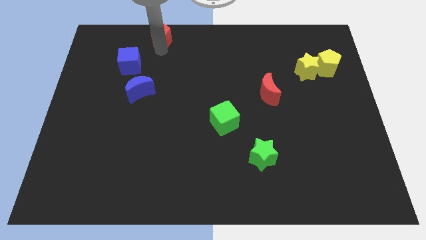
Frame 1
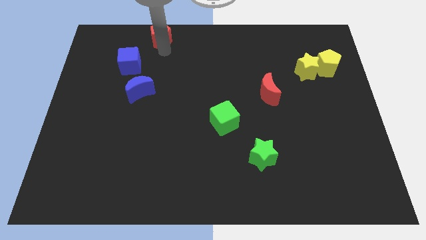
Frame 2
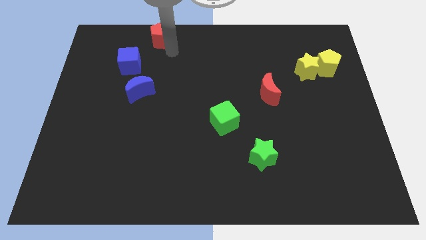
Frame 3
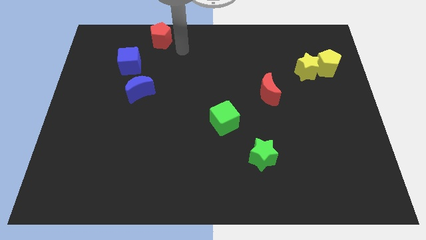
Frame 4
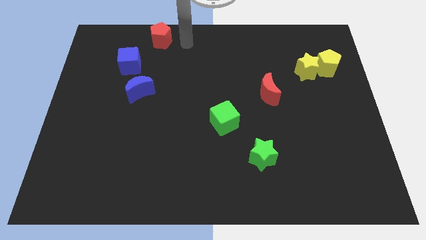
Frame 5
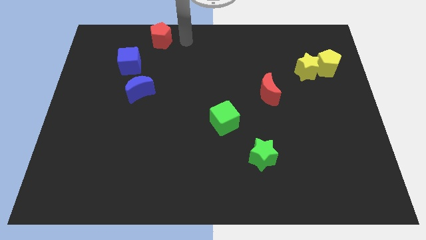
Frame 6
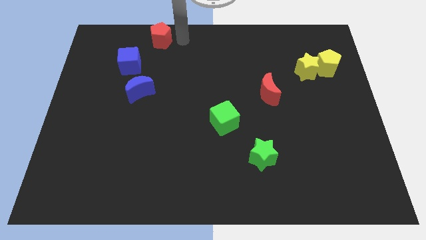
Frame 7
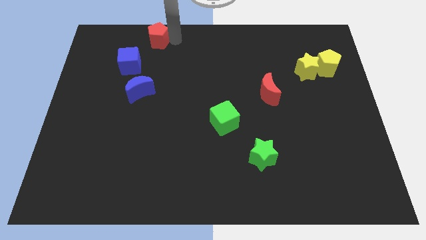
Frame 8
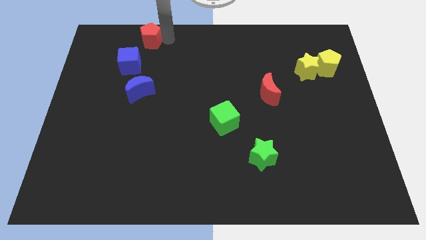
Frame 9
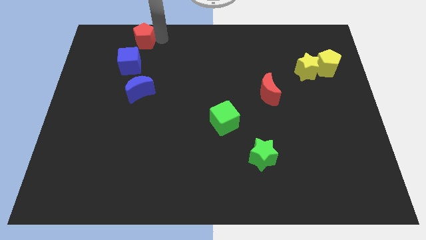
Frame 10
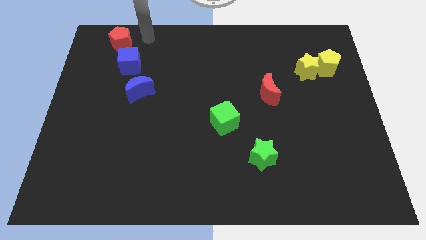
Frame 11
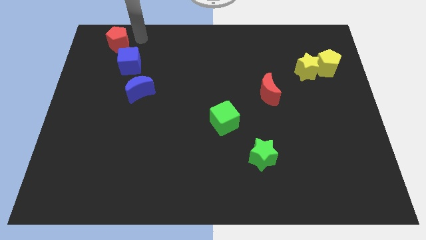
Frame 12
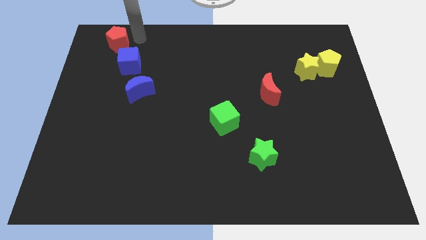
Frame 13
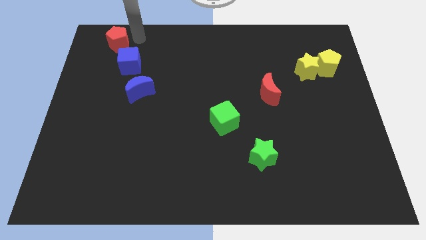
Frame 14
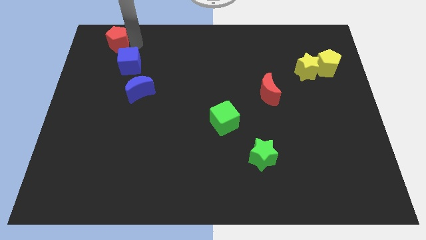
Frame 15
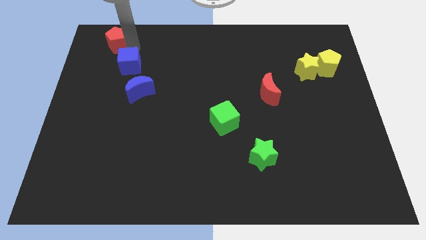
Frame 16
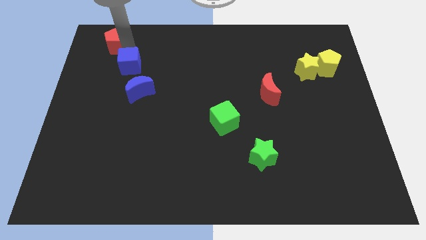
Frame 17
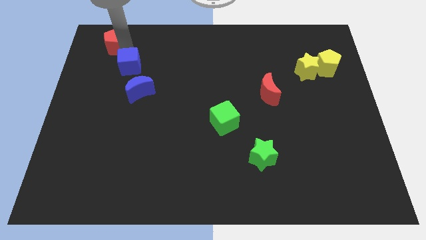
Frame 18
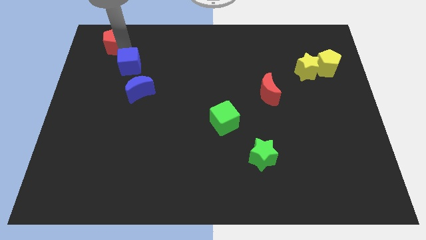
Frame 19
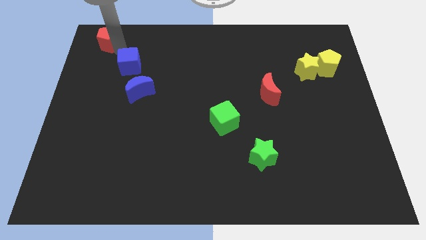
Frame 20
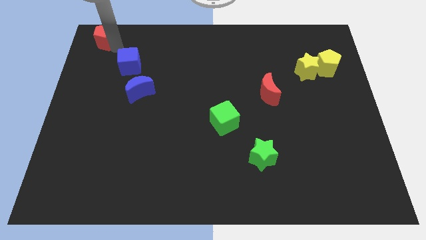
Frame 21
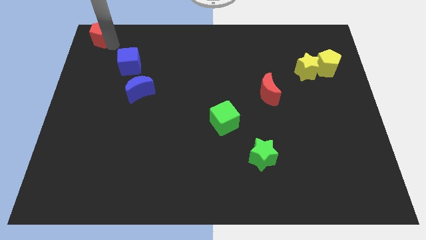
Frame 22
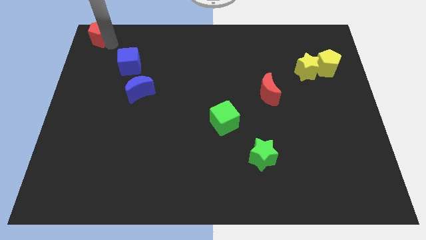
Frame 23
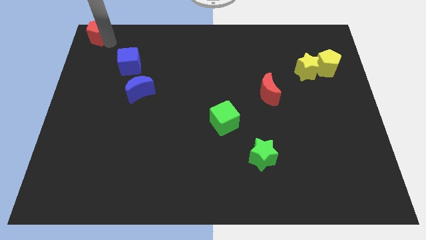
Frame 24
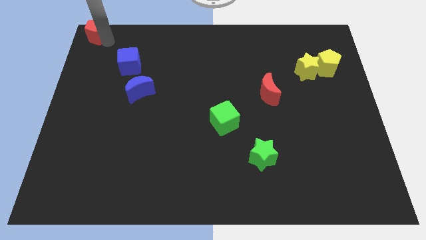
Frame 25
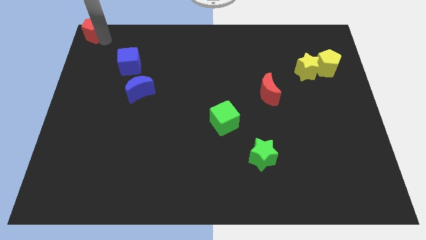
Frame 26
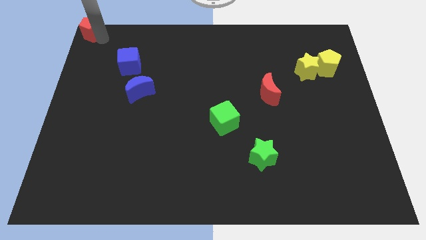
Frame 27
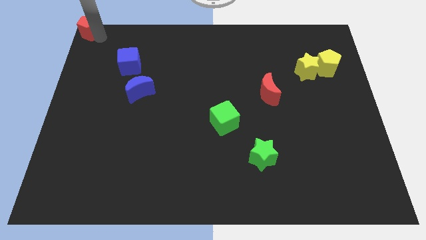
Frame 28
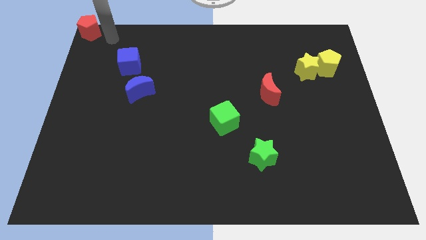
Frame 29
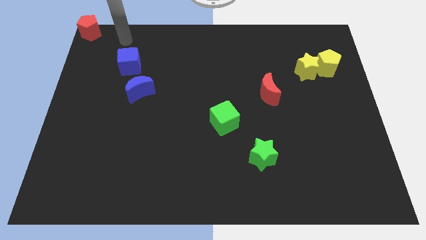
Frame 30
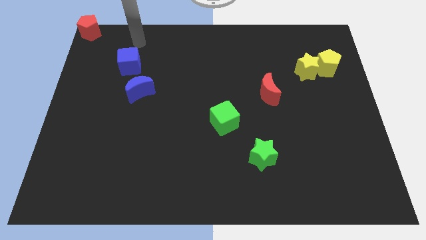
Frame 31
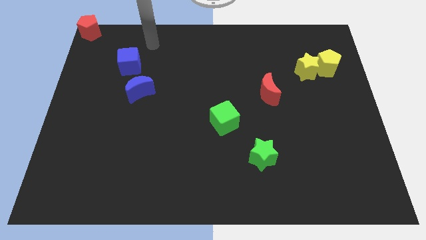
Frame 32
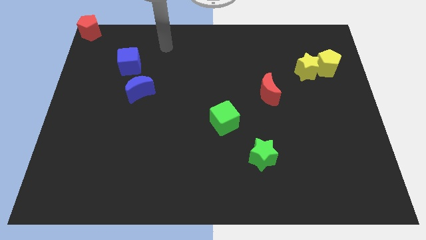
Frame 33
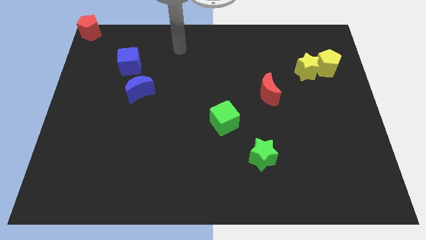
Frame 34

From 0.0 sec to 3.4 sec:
place the red pentagon to the top left corner of the board

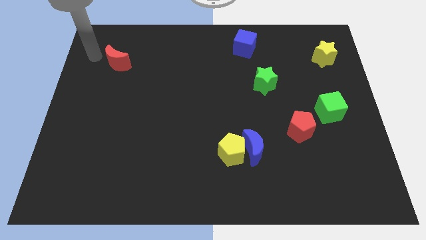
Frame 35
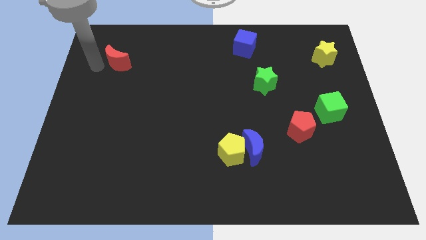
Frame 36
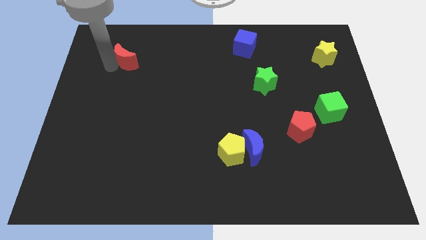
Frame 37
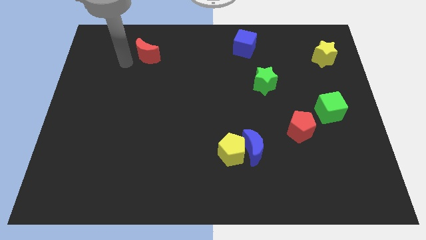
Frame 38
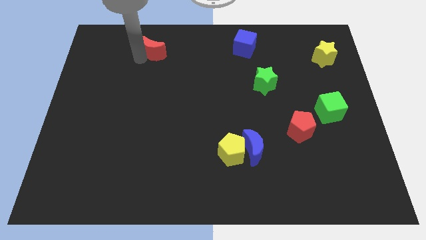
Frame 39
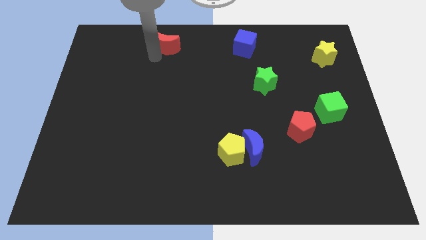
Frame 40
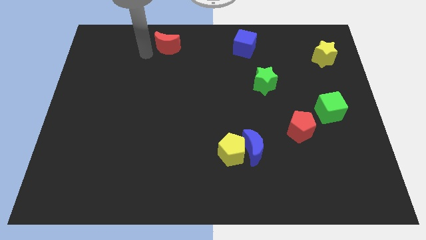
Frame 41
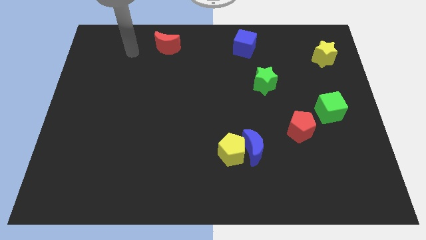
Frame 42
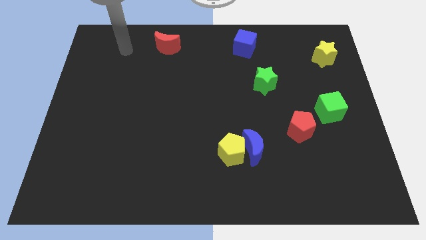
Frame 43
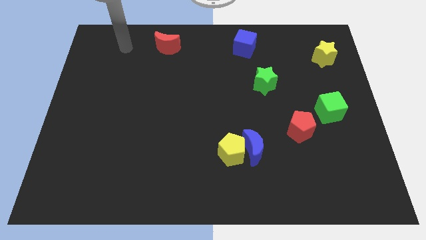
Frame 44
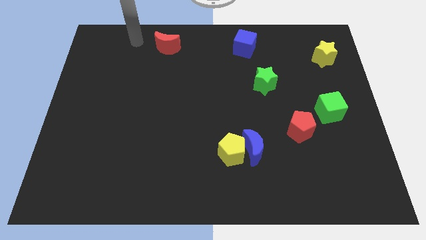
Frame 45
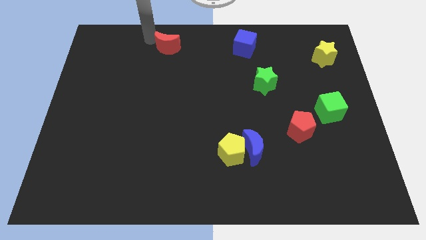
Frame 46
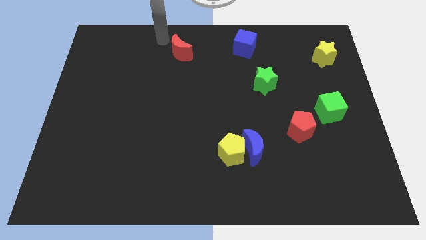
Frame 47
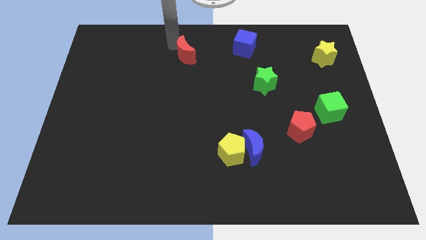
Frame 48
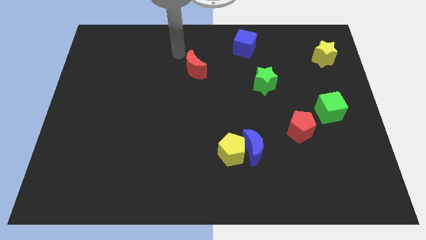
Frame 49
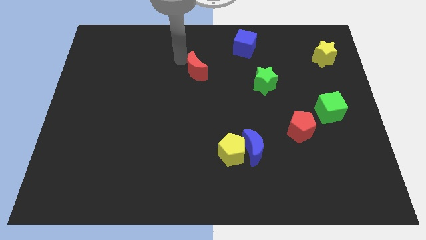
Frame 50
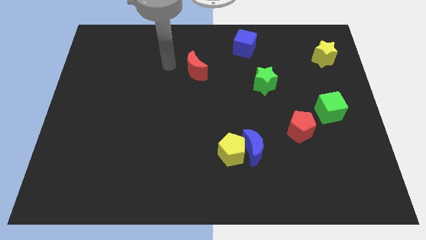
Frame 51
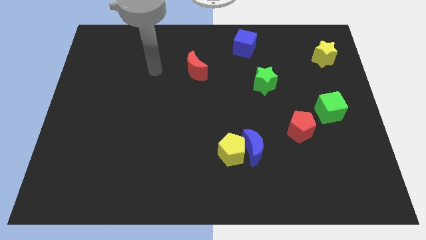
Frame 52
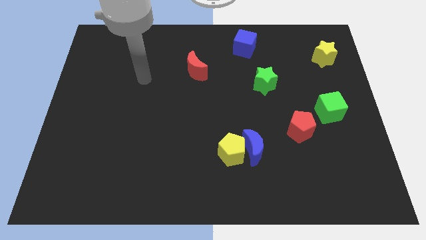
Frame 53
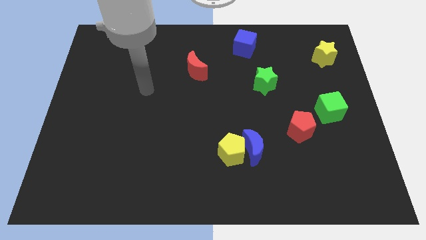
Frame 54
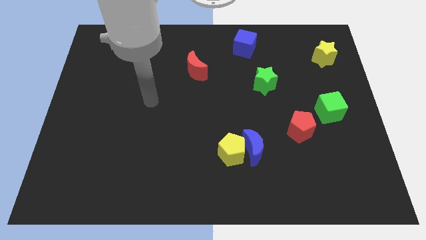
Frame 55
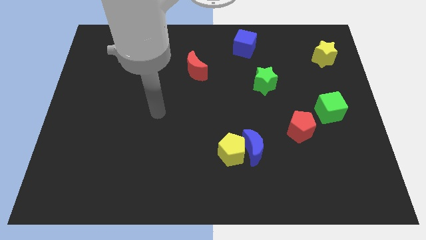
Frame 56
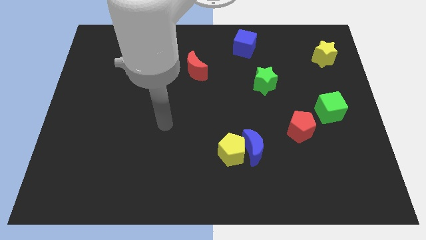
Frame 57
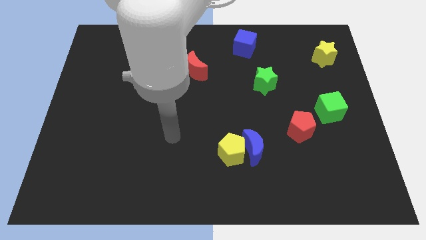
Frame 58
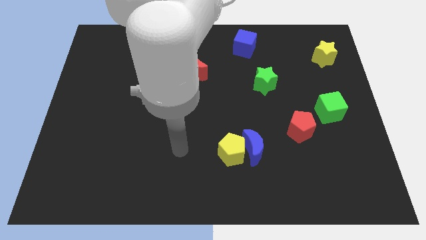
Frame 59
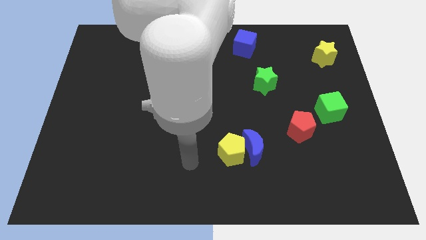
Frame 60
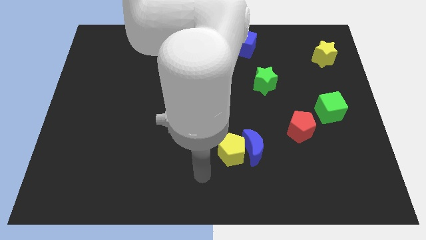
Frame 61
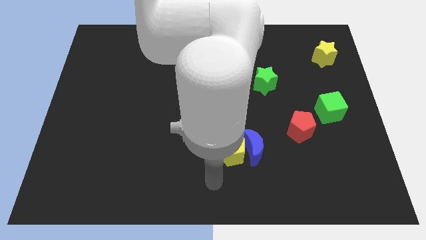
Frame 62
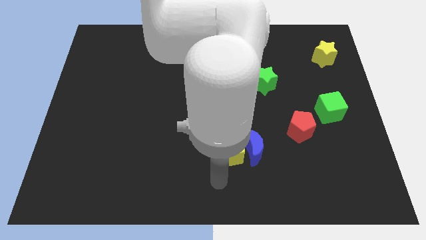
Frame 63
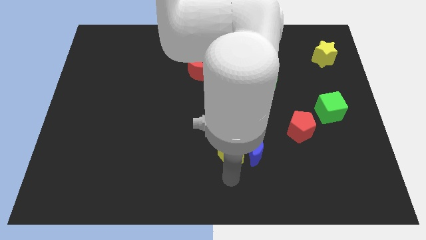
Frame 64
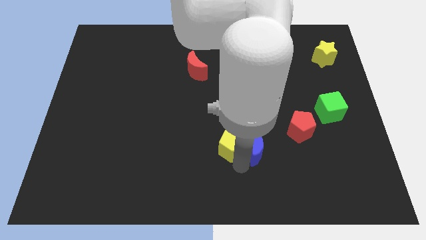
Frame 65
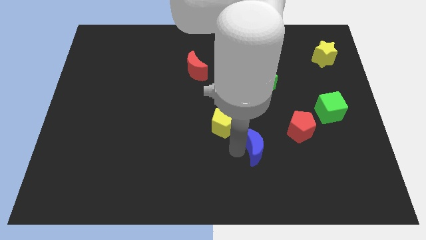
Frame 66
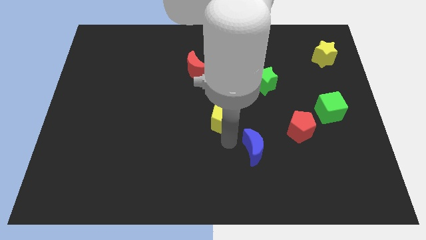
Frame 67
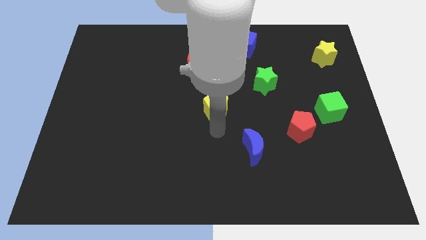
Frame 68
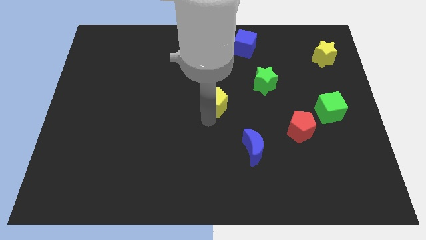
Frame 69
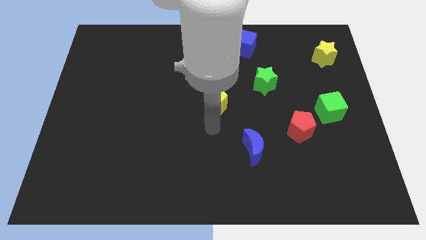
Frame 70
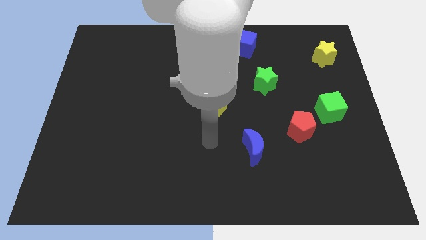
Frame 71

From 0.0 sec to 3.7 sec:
move the yellow pentagon to the center of the board

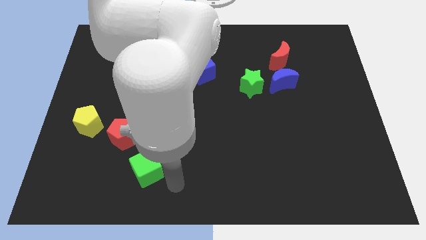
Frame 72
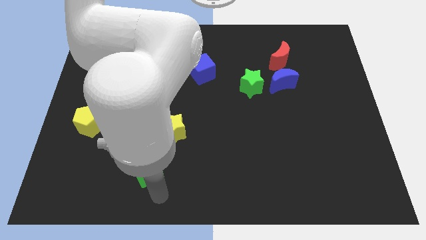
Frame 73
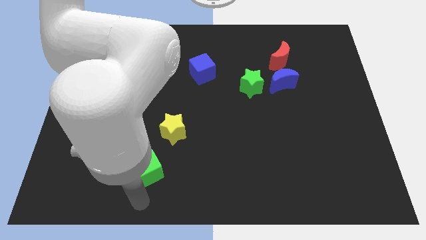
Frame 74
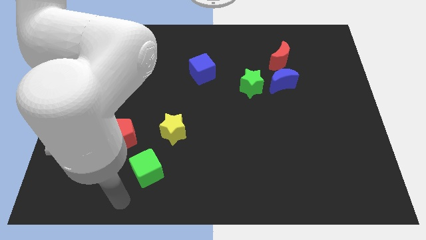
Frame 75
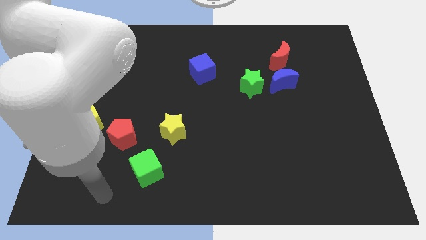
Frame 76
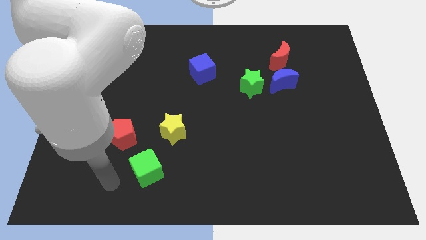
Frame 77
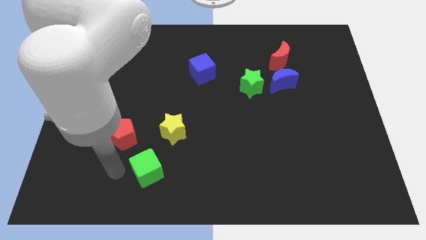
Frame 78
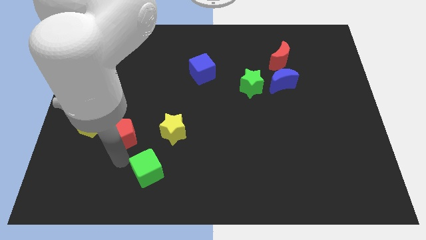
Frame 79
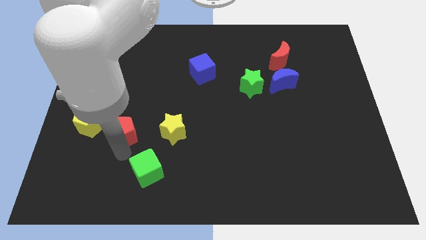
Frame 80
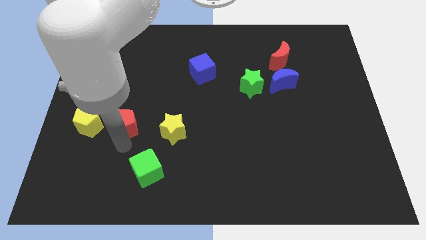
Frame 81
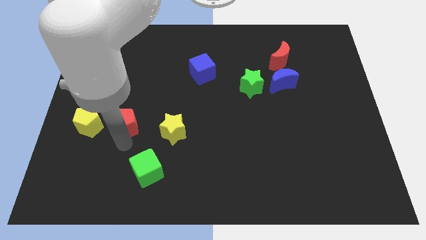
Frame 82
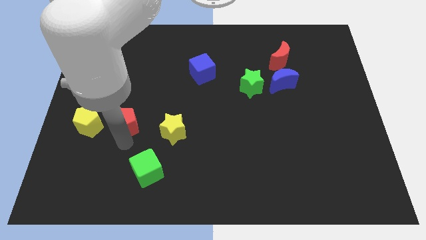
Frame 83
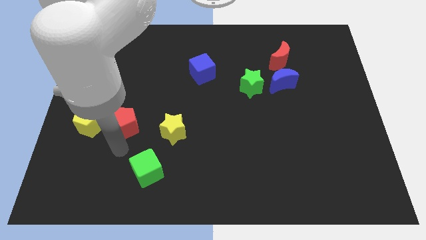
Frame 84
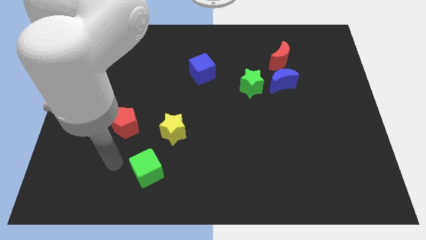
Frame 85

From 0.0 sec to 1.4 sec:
move the red pentagon slightly up

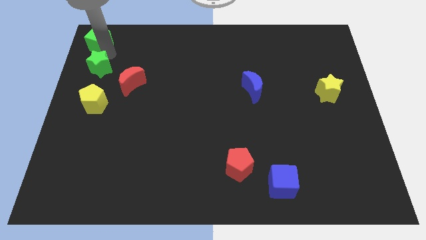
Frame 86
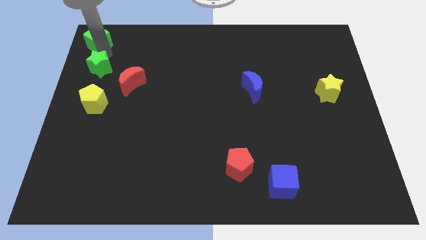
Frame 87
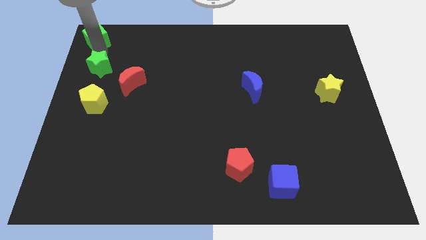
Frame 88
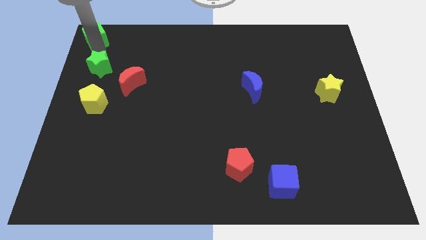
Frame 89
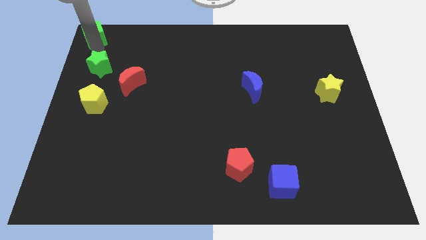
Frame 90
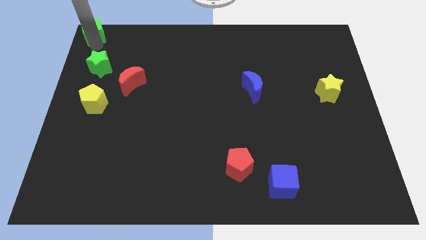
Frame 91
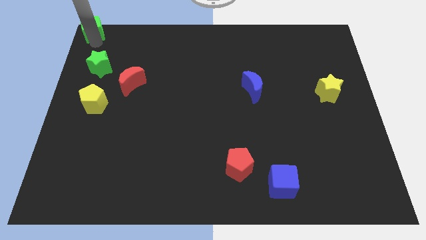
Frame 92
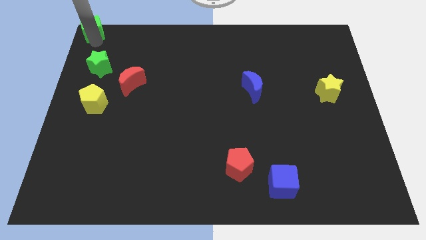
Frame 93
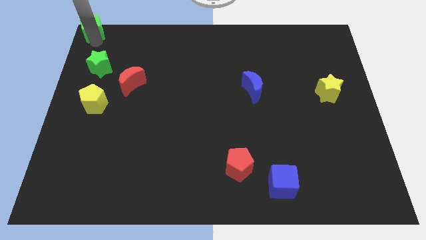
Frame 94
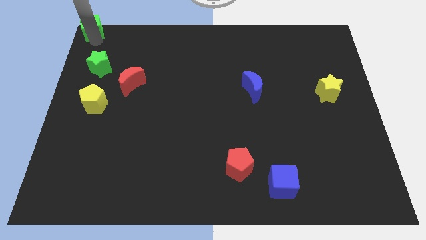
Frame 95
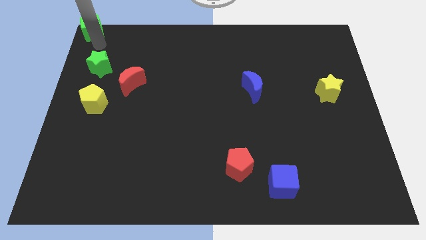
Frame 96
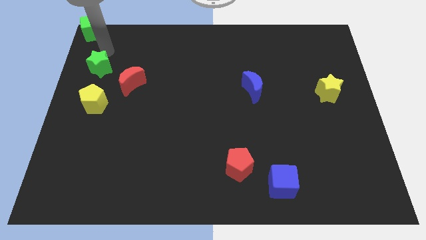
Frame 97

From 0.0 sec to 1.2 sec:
push the green cube at the top left corner of the board
